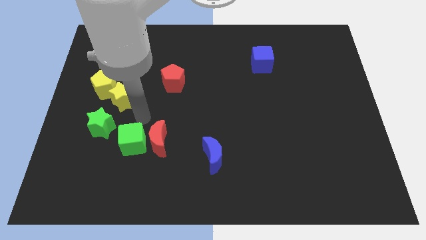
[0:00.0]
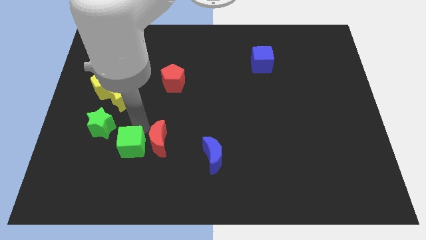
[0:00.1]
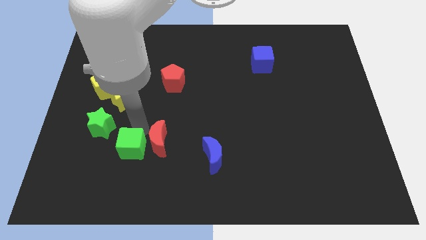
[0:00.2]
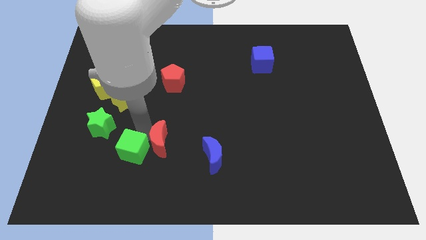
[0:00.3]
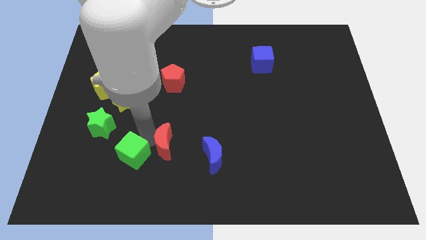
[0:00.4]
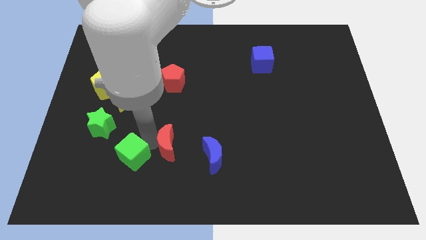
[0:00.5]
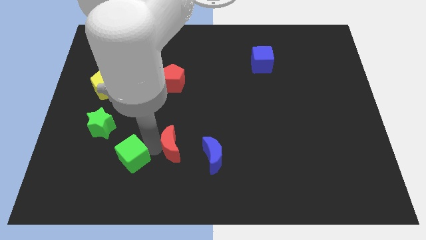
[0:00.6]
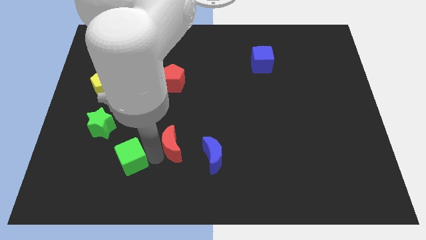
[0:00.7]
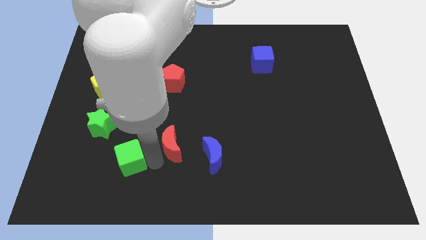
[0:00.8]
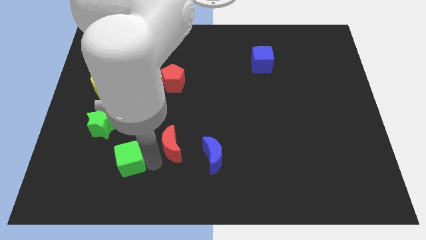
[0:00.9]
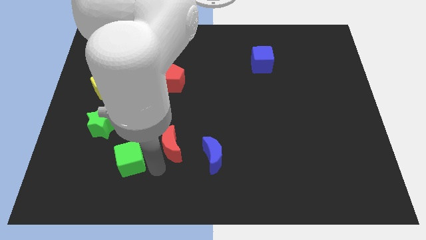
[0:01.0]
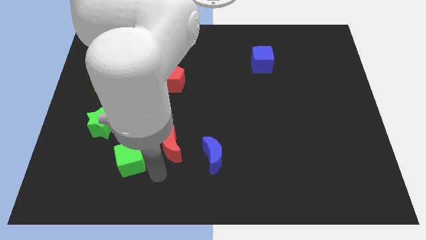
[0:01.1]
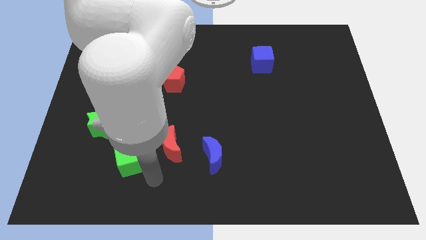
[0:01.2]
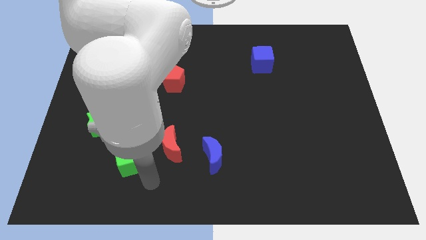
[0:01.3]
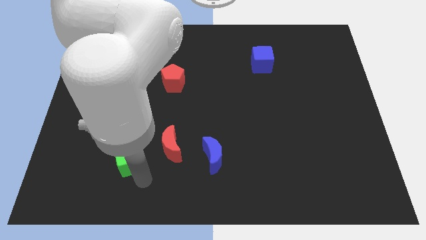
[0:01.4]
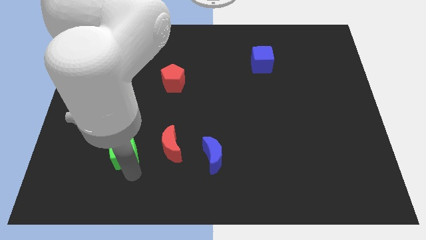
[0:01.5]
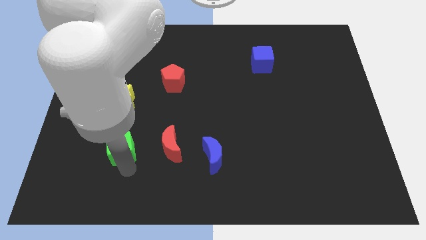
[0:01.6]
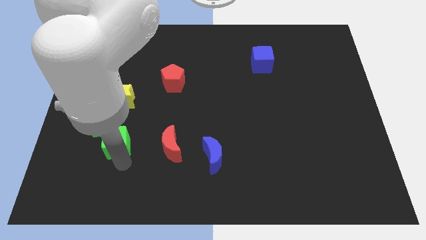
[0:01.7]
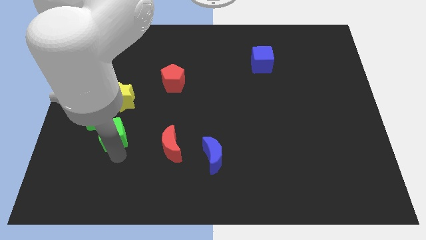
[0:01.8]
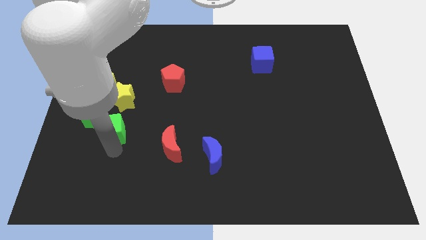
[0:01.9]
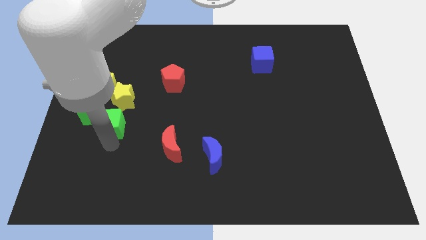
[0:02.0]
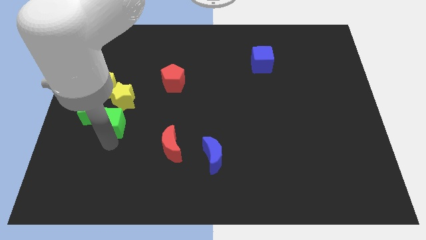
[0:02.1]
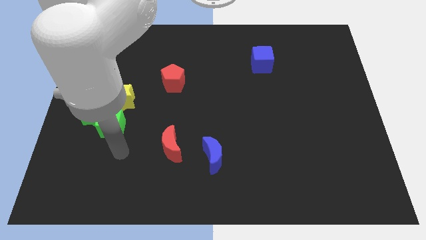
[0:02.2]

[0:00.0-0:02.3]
push the green cube into green star

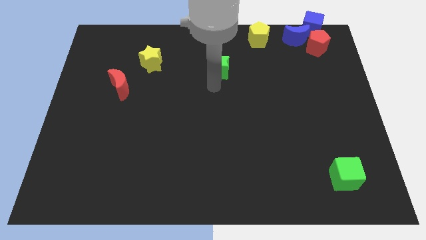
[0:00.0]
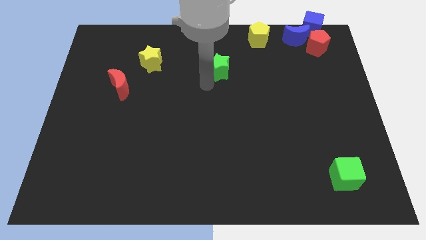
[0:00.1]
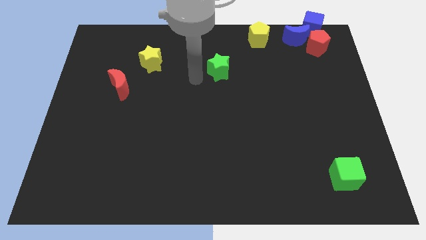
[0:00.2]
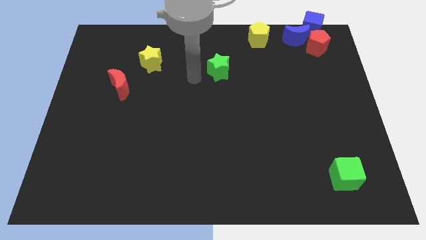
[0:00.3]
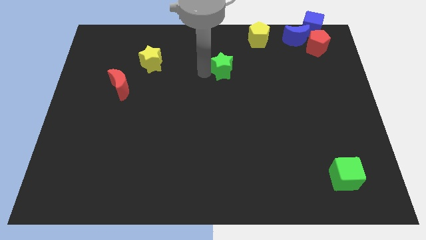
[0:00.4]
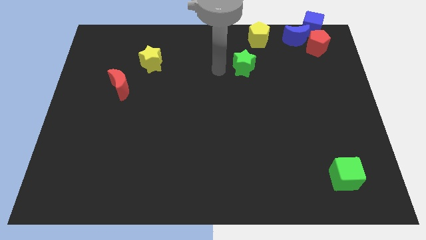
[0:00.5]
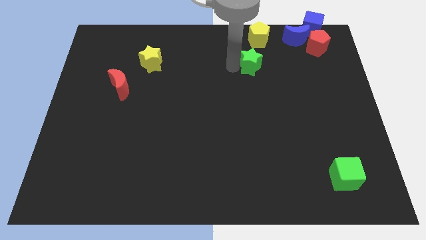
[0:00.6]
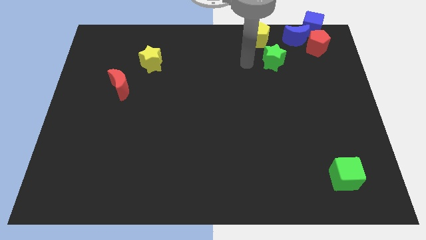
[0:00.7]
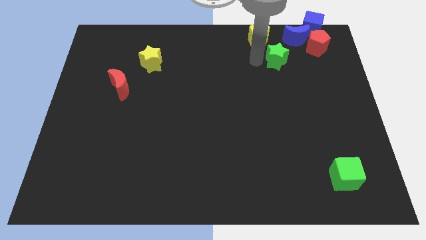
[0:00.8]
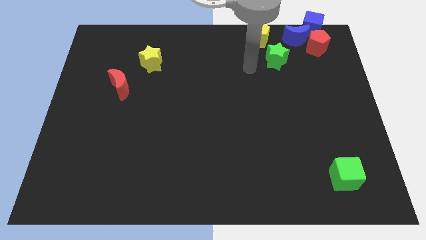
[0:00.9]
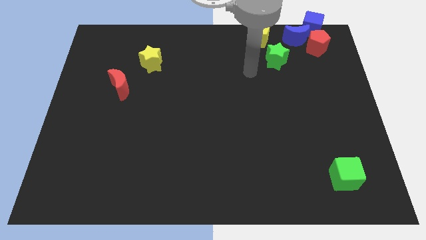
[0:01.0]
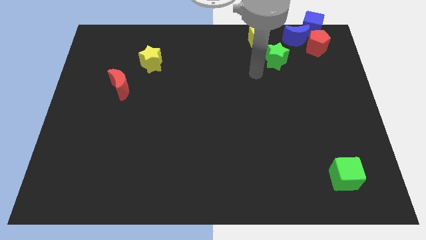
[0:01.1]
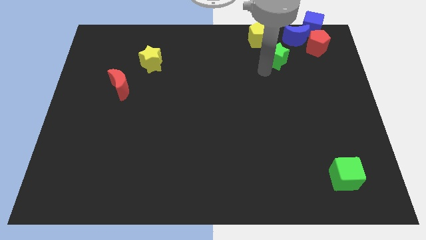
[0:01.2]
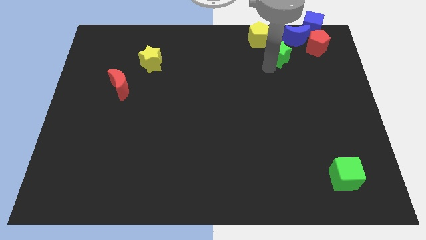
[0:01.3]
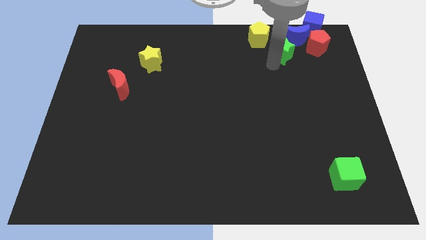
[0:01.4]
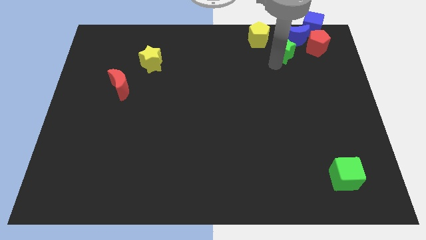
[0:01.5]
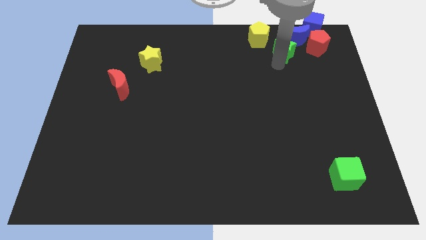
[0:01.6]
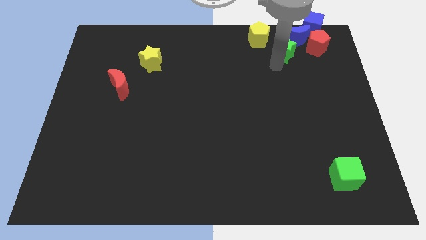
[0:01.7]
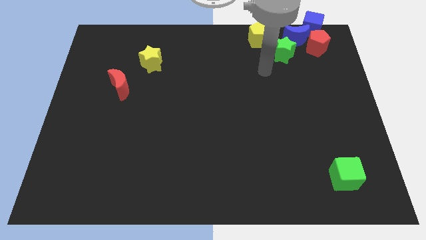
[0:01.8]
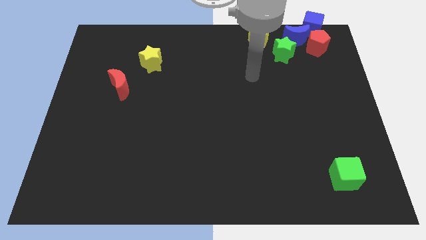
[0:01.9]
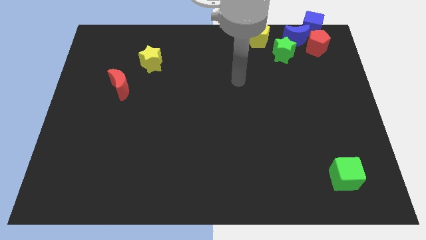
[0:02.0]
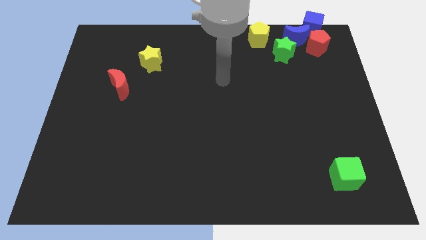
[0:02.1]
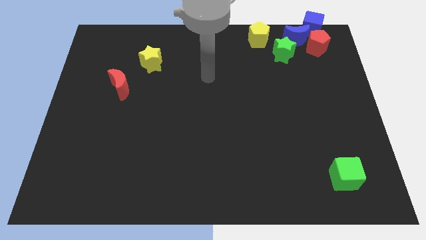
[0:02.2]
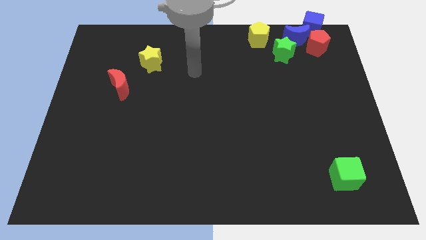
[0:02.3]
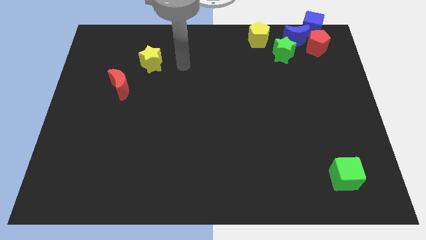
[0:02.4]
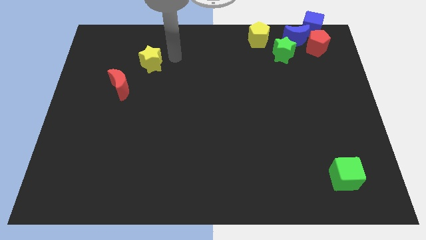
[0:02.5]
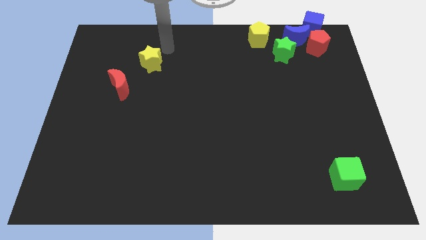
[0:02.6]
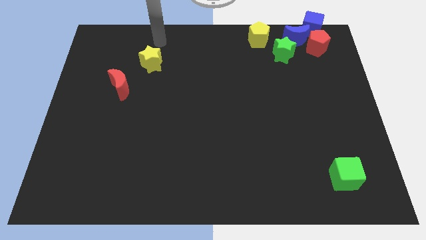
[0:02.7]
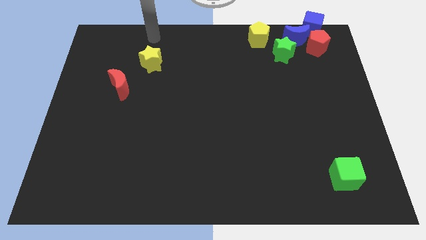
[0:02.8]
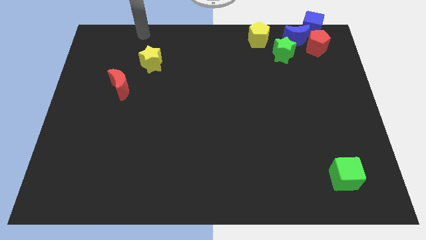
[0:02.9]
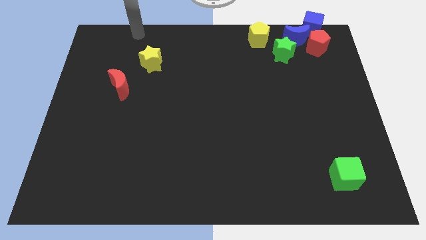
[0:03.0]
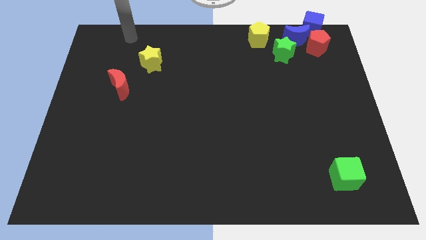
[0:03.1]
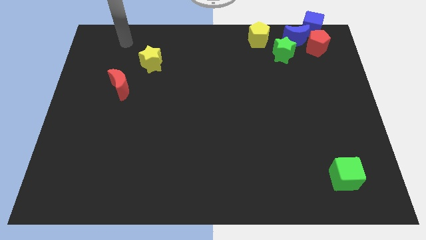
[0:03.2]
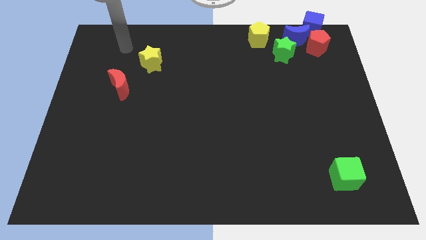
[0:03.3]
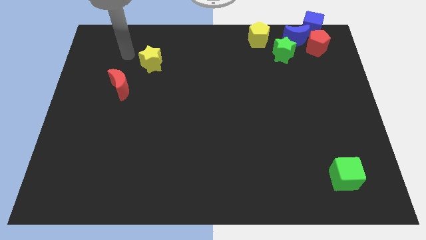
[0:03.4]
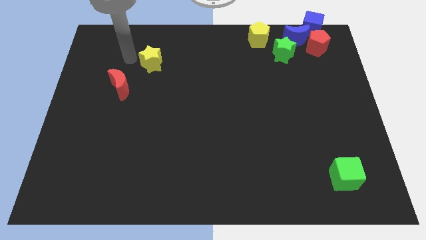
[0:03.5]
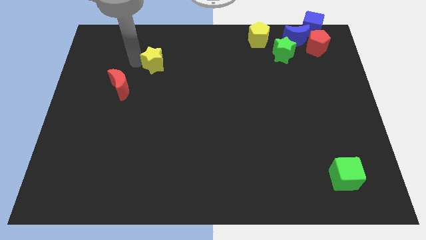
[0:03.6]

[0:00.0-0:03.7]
place green star near blue crescent

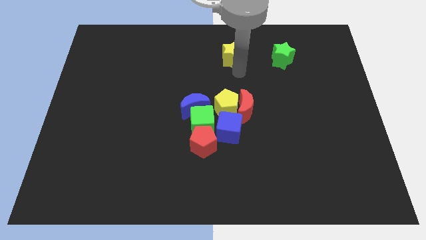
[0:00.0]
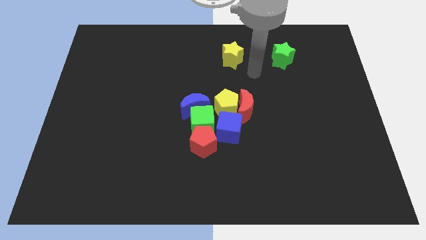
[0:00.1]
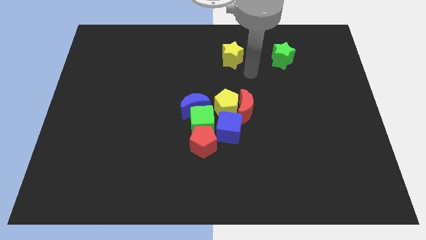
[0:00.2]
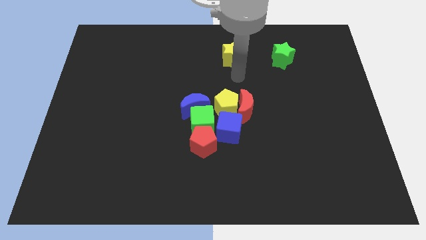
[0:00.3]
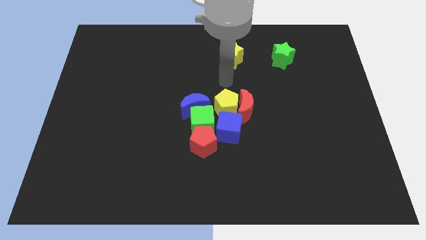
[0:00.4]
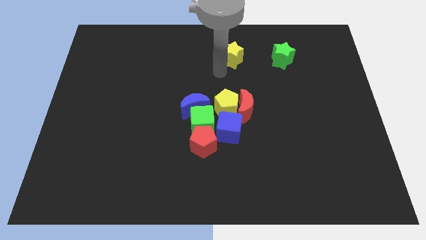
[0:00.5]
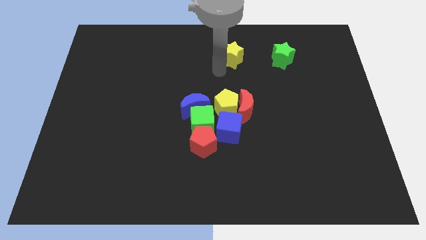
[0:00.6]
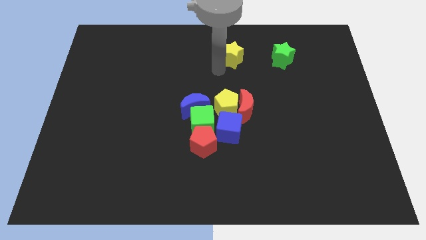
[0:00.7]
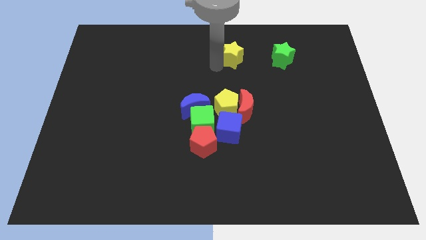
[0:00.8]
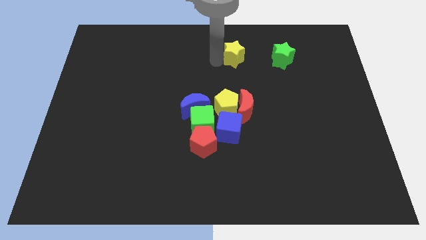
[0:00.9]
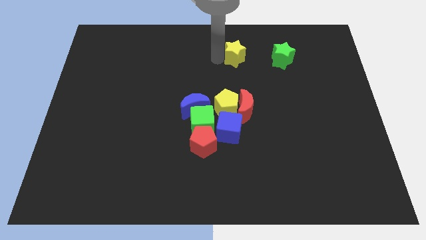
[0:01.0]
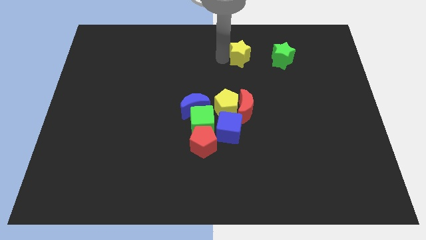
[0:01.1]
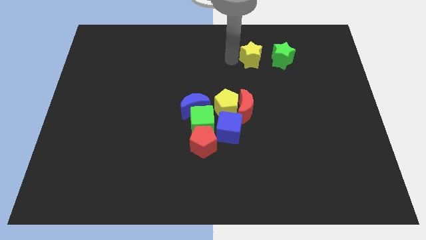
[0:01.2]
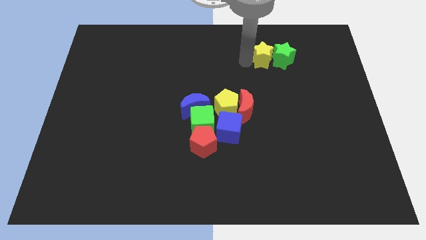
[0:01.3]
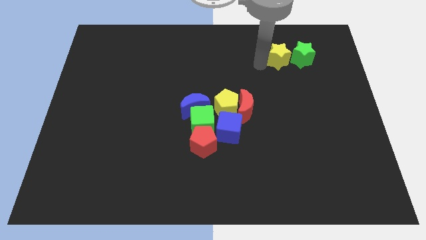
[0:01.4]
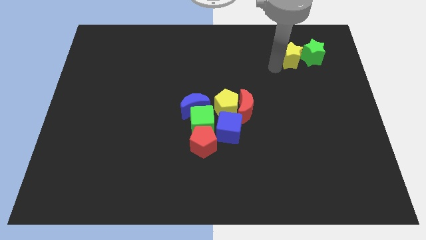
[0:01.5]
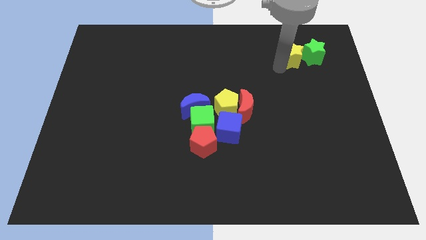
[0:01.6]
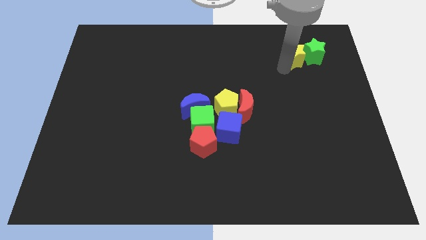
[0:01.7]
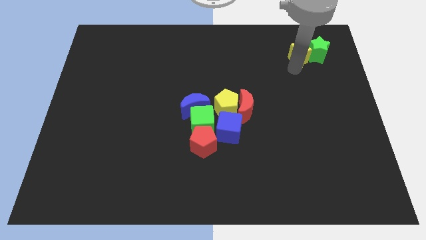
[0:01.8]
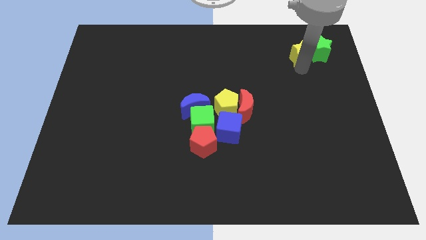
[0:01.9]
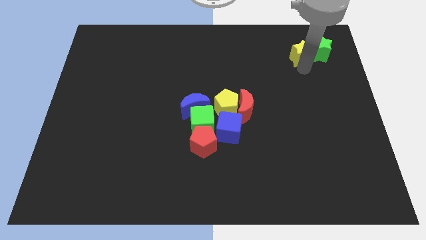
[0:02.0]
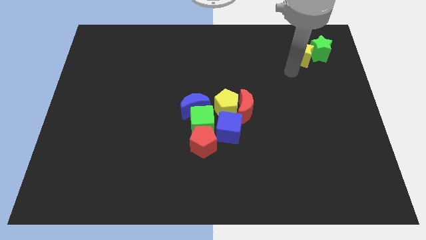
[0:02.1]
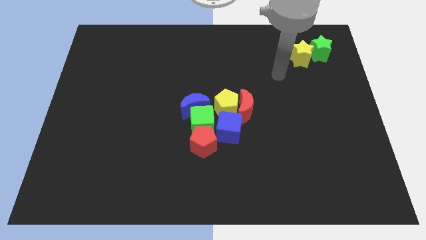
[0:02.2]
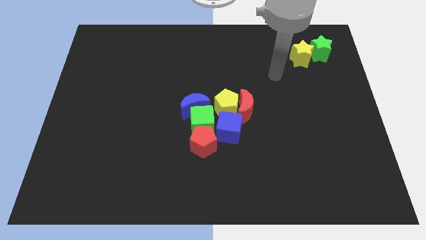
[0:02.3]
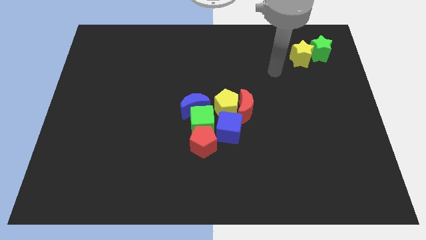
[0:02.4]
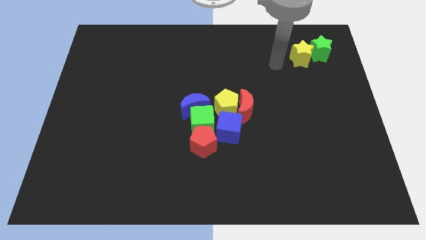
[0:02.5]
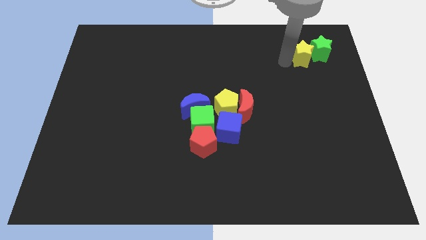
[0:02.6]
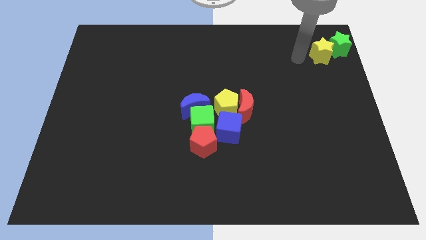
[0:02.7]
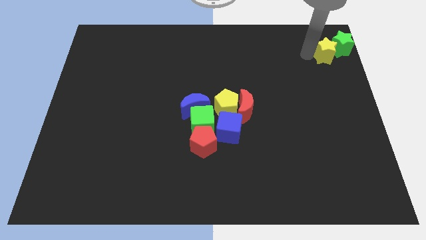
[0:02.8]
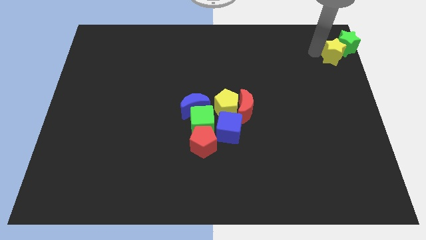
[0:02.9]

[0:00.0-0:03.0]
push the yellow star and green star to the right side of the board
